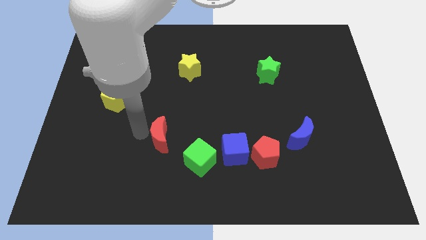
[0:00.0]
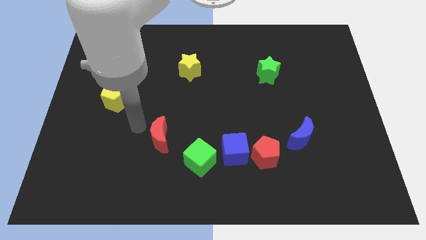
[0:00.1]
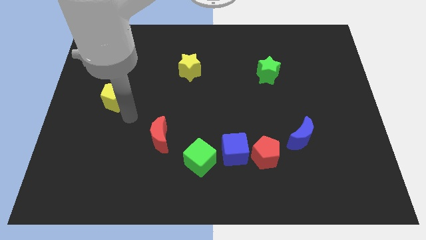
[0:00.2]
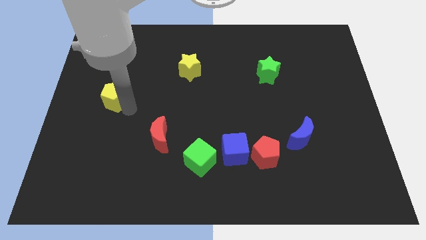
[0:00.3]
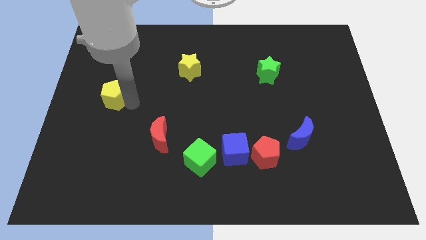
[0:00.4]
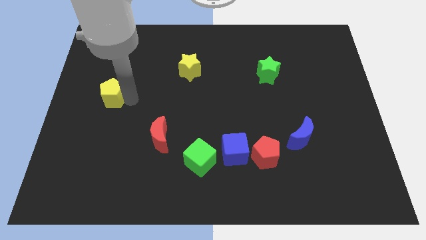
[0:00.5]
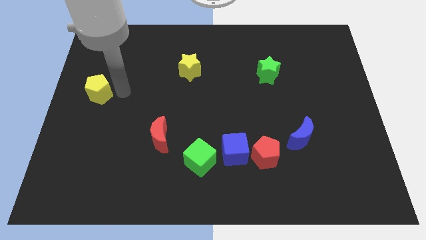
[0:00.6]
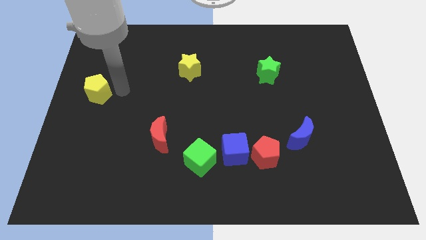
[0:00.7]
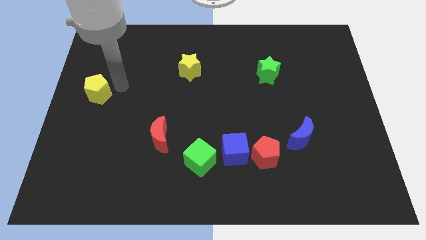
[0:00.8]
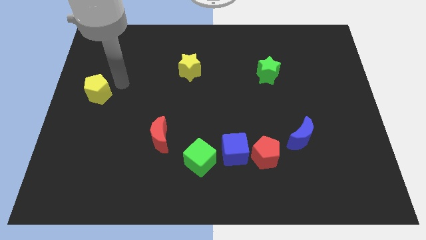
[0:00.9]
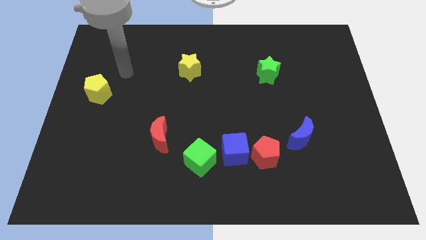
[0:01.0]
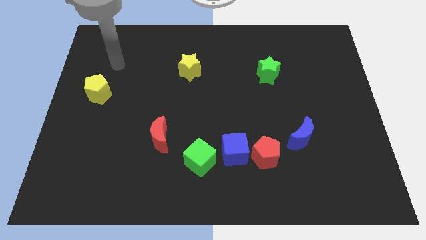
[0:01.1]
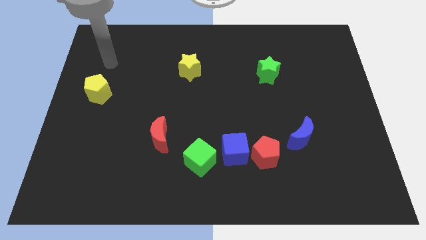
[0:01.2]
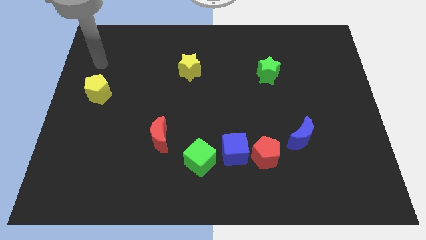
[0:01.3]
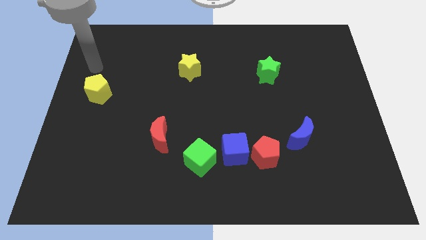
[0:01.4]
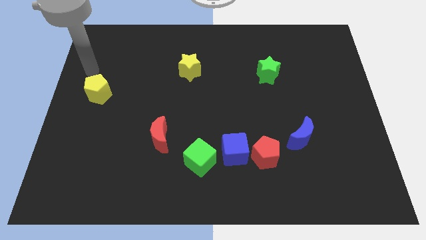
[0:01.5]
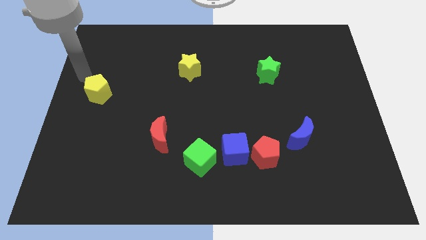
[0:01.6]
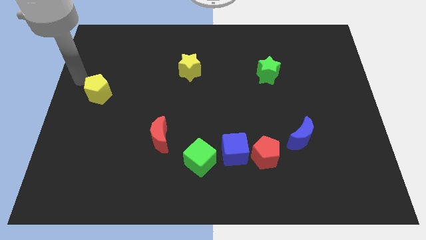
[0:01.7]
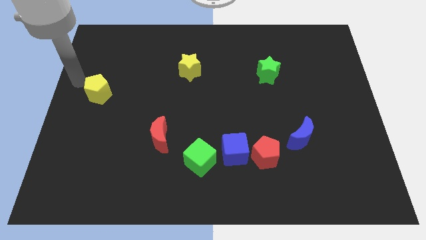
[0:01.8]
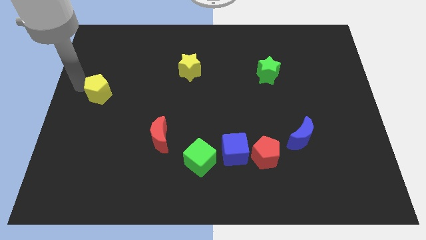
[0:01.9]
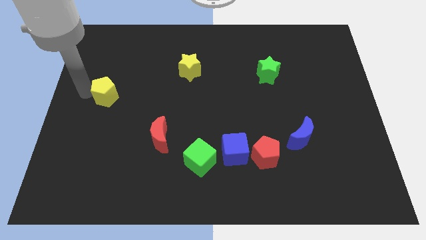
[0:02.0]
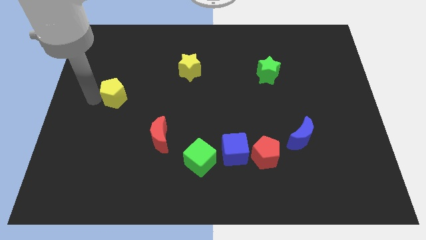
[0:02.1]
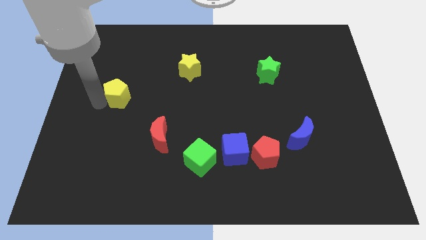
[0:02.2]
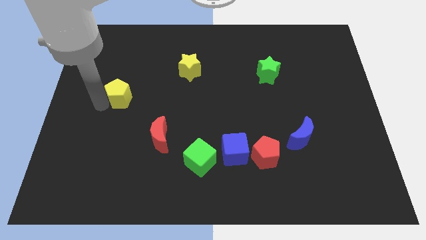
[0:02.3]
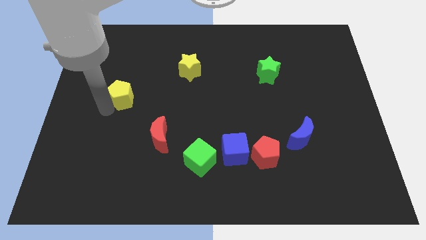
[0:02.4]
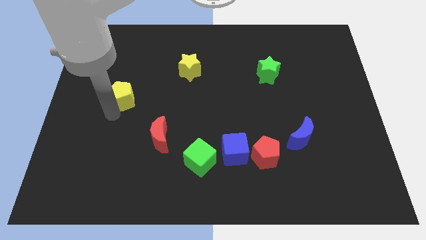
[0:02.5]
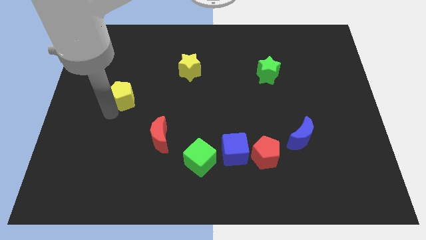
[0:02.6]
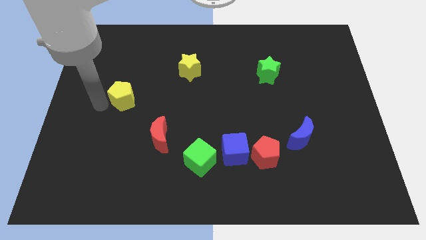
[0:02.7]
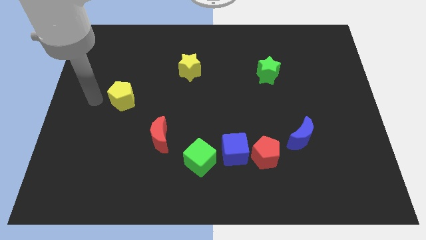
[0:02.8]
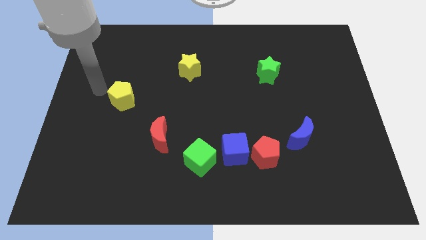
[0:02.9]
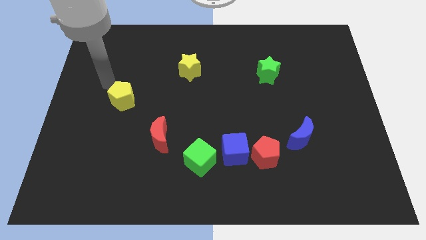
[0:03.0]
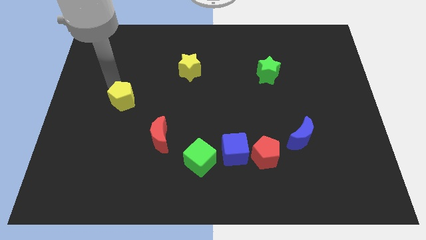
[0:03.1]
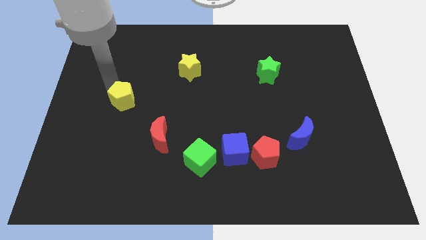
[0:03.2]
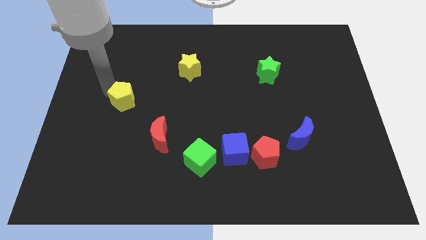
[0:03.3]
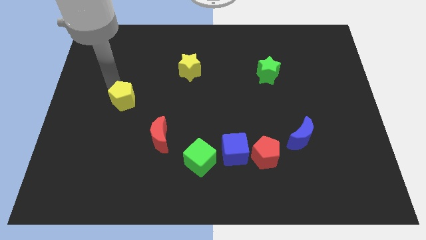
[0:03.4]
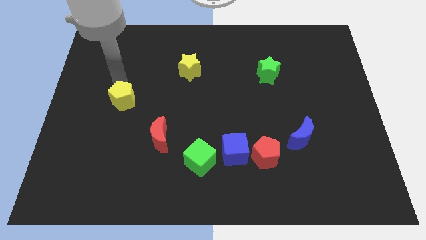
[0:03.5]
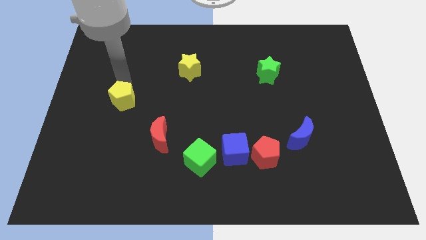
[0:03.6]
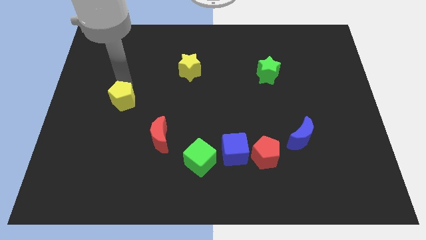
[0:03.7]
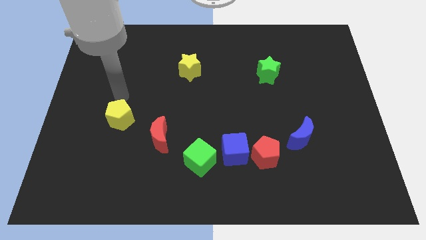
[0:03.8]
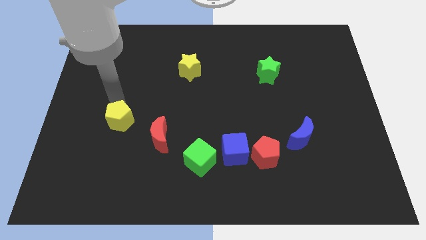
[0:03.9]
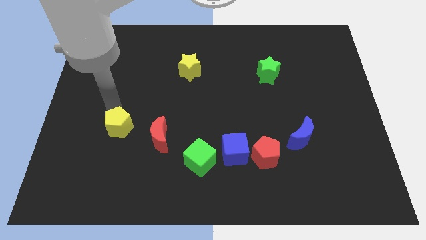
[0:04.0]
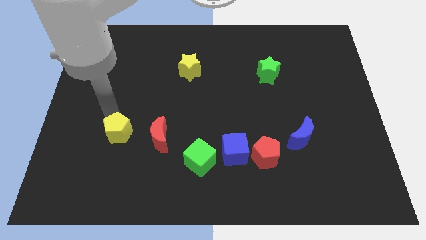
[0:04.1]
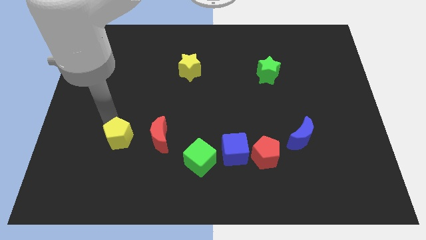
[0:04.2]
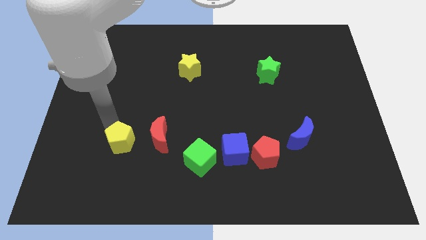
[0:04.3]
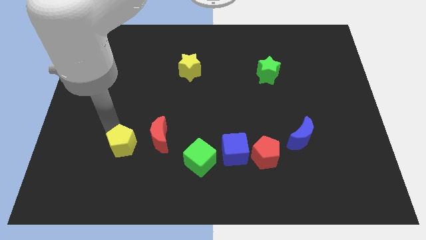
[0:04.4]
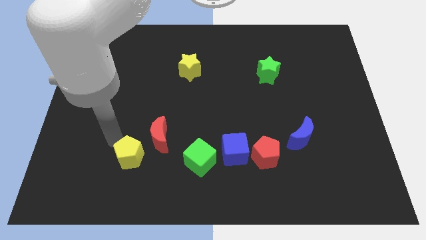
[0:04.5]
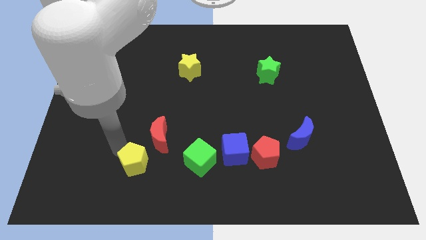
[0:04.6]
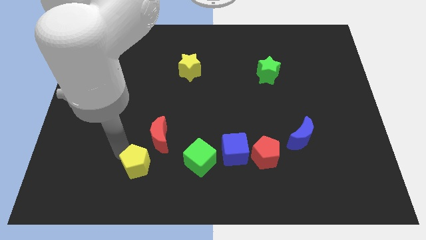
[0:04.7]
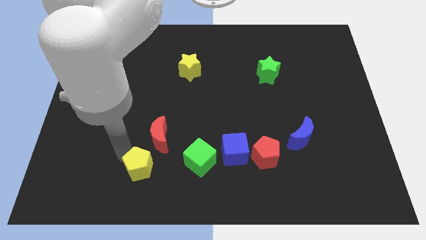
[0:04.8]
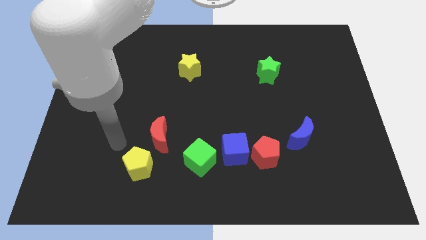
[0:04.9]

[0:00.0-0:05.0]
place the yellow pentagon below the red crescent

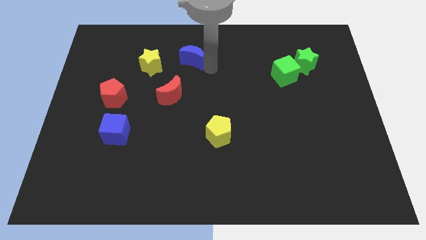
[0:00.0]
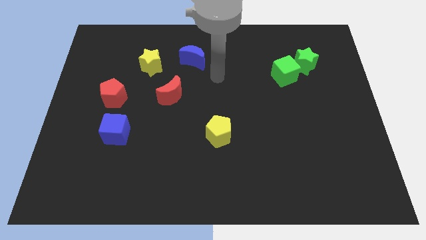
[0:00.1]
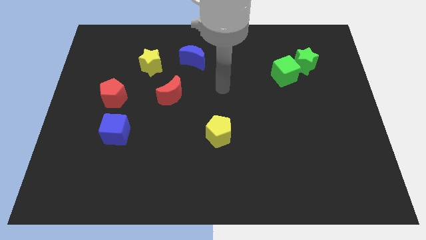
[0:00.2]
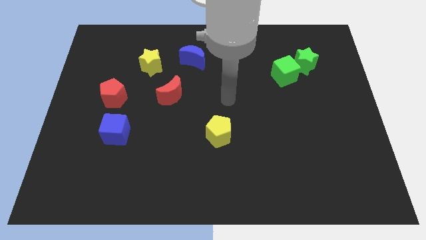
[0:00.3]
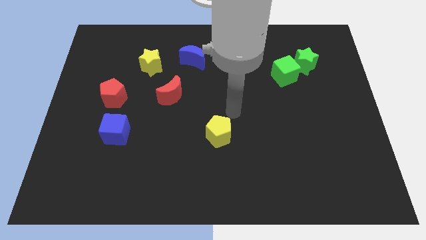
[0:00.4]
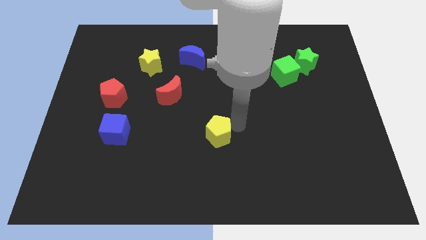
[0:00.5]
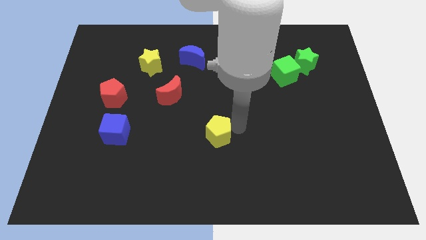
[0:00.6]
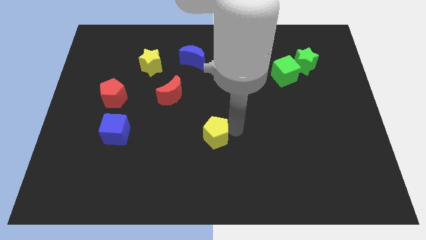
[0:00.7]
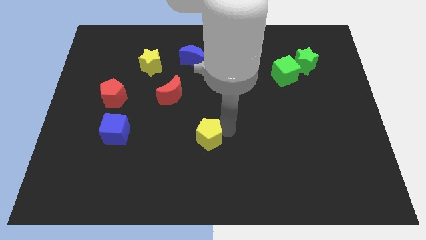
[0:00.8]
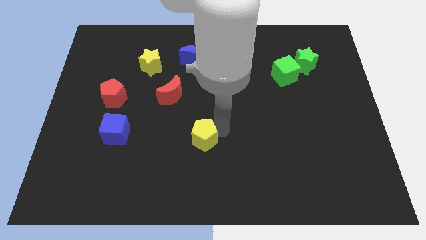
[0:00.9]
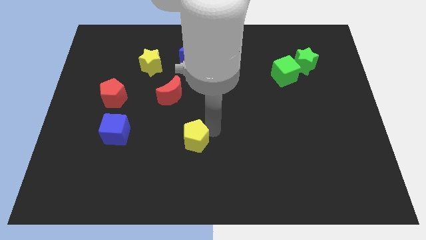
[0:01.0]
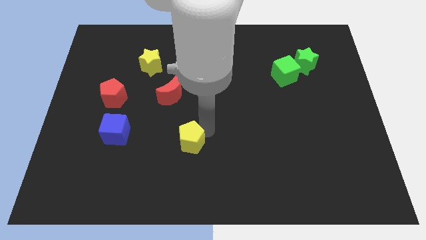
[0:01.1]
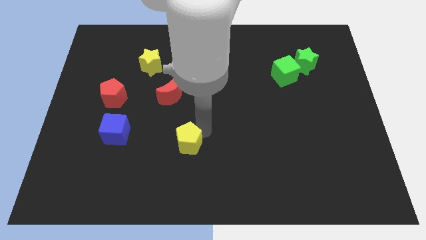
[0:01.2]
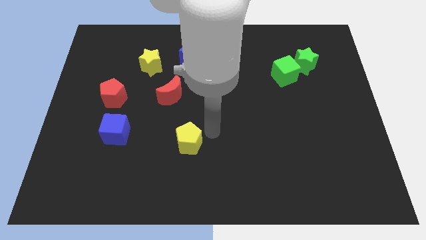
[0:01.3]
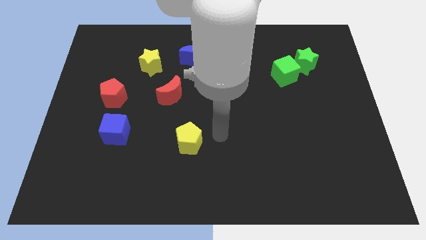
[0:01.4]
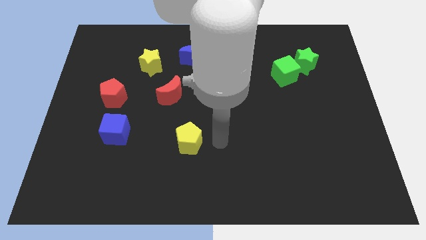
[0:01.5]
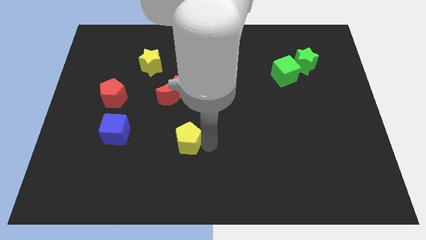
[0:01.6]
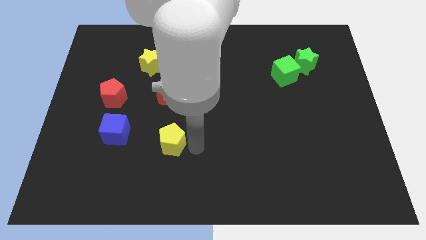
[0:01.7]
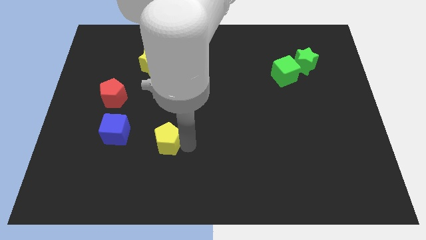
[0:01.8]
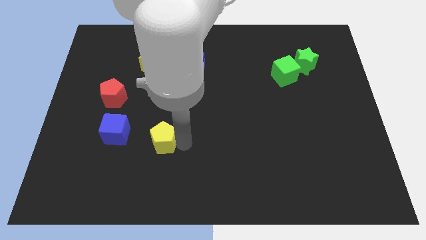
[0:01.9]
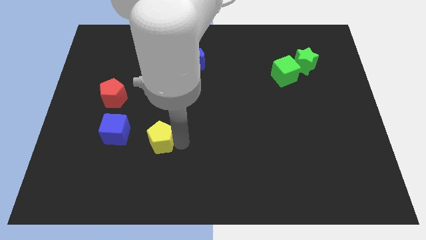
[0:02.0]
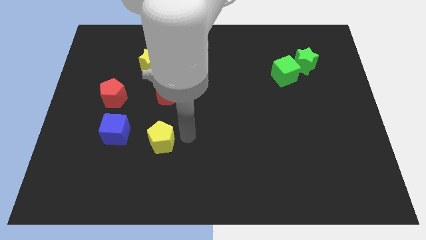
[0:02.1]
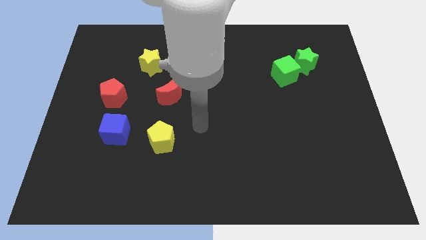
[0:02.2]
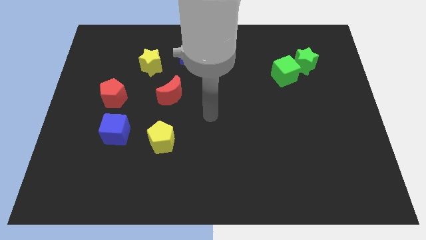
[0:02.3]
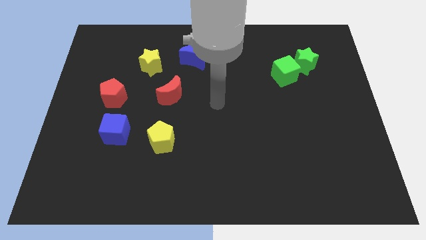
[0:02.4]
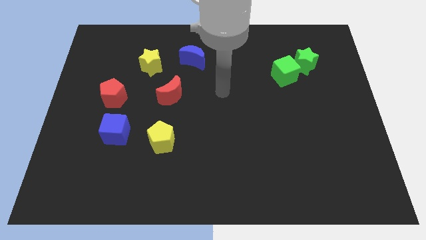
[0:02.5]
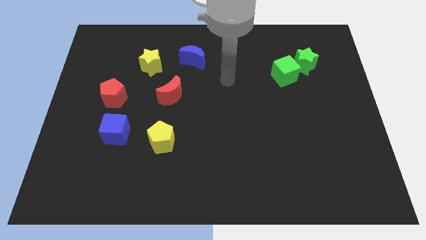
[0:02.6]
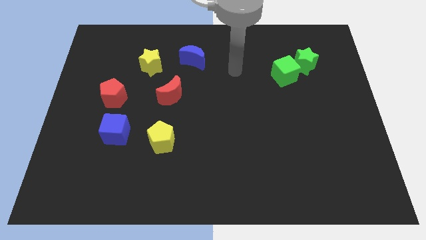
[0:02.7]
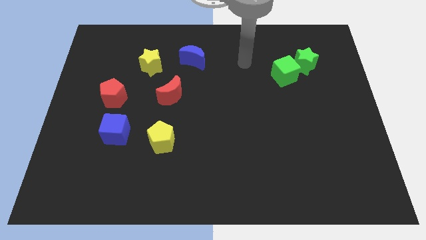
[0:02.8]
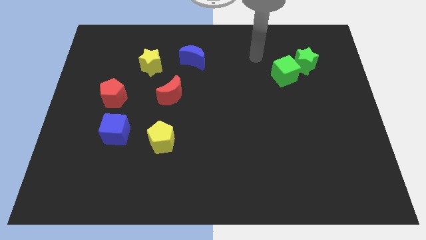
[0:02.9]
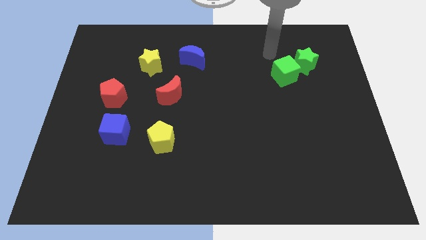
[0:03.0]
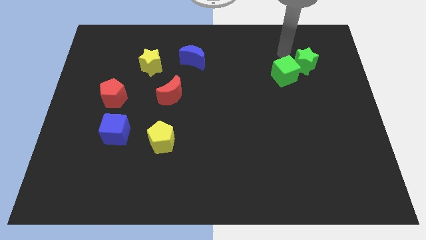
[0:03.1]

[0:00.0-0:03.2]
slide the yellow pentagon slightly towards the blue cube

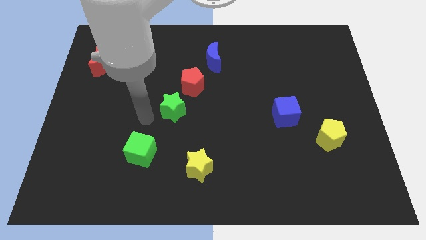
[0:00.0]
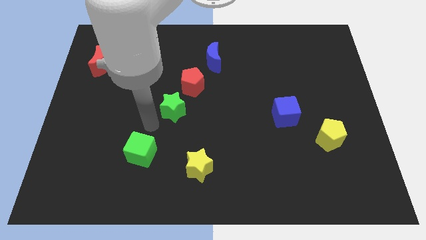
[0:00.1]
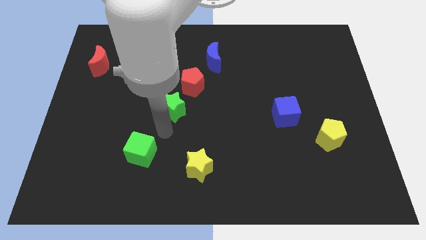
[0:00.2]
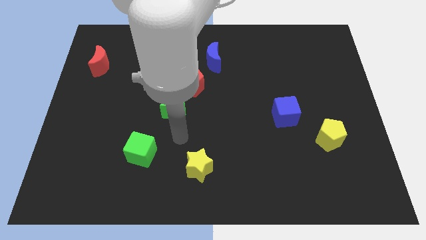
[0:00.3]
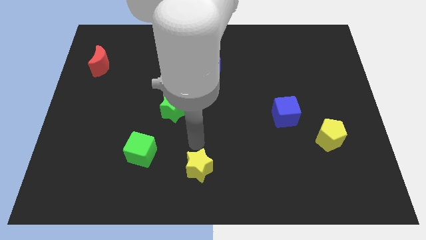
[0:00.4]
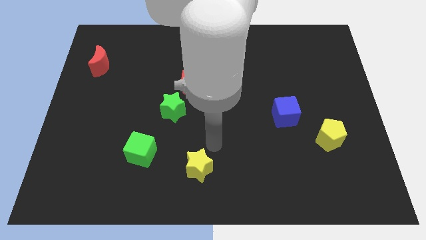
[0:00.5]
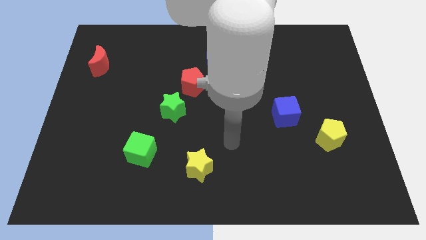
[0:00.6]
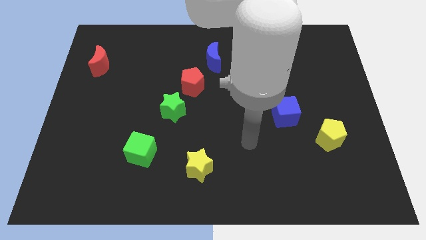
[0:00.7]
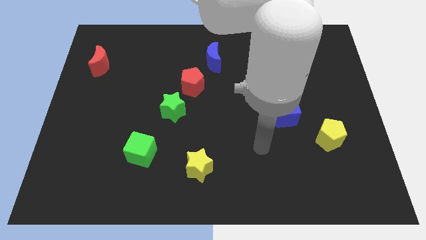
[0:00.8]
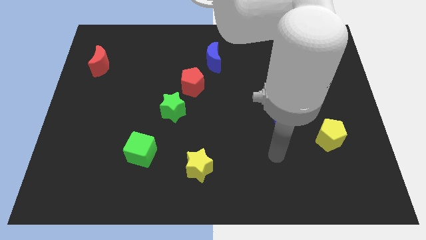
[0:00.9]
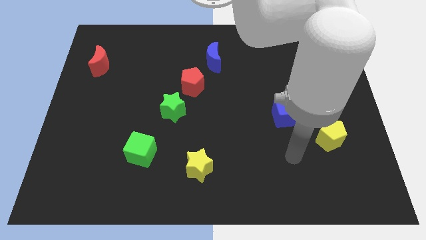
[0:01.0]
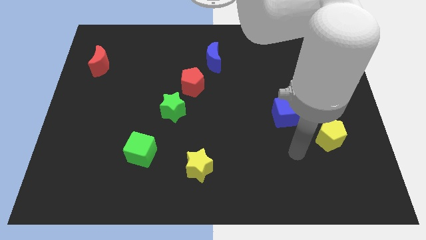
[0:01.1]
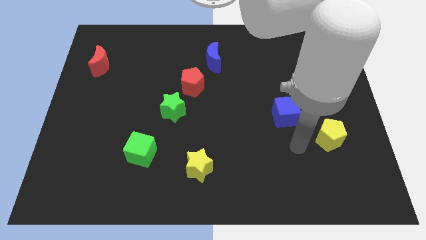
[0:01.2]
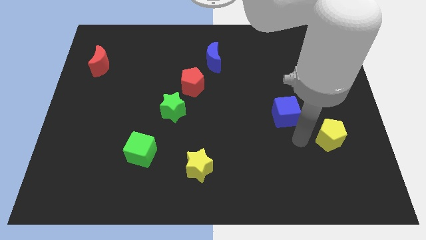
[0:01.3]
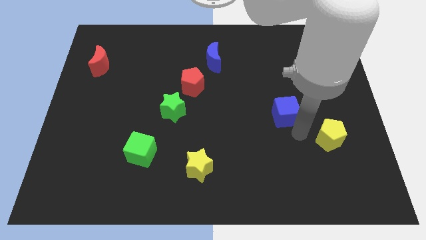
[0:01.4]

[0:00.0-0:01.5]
point the arm below the blue cube
